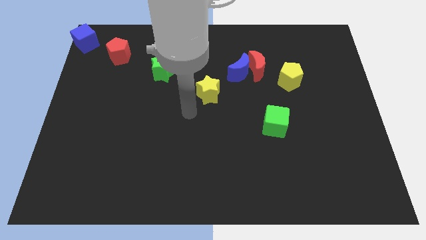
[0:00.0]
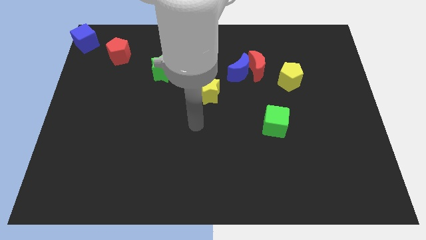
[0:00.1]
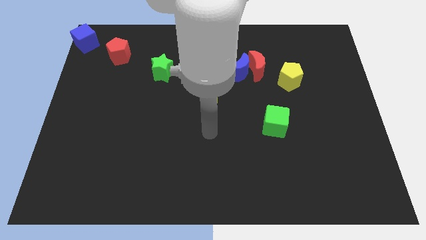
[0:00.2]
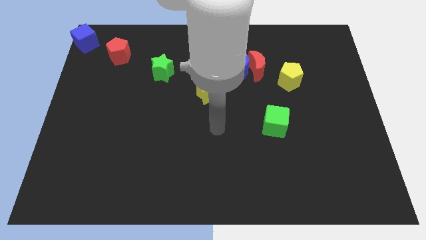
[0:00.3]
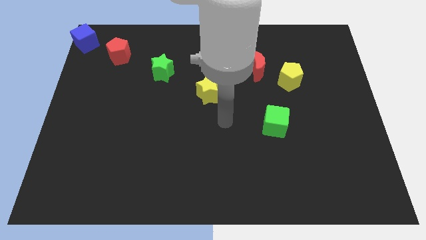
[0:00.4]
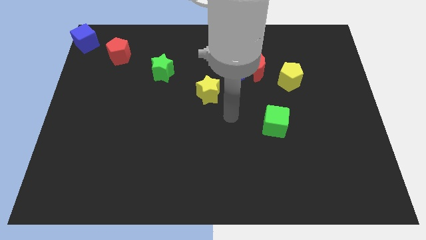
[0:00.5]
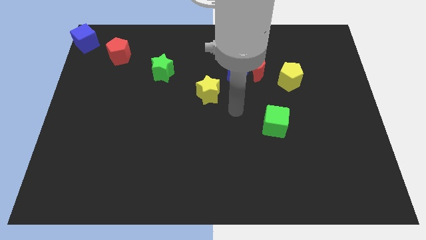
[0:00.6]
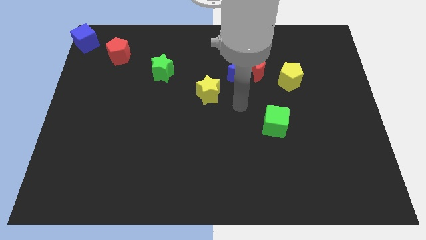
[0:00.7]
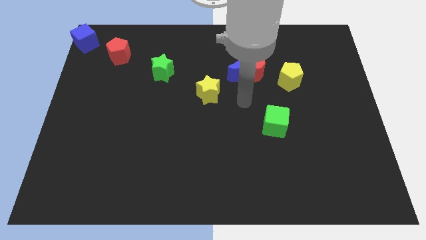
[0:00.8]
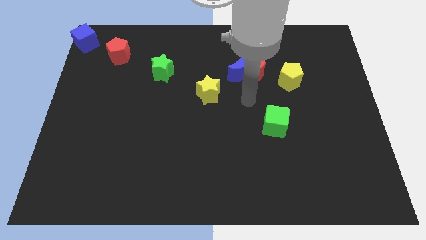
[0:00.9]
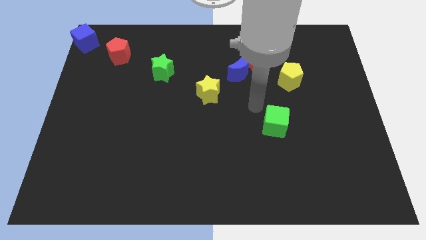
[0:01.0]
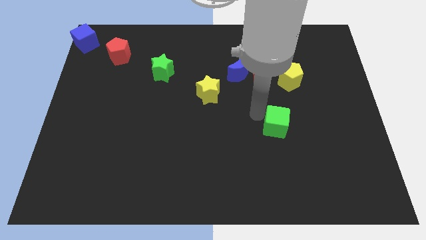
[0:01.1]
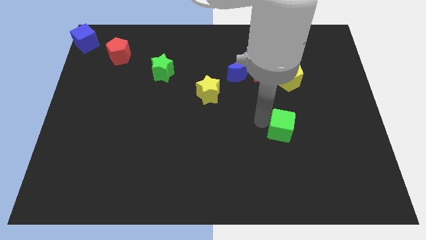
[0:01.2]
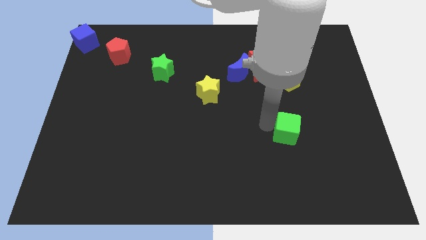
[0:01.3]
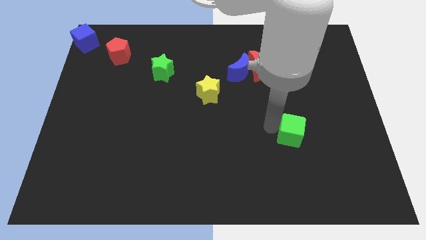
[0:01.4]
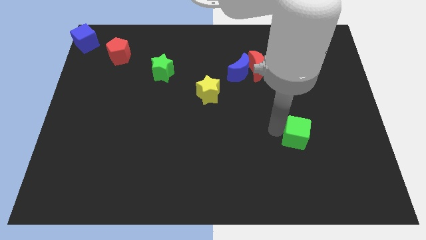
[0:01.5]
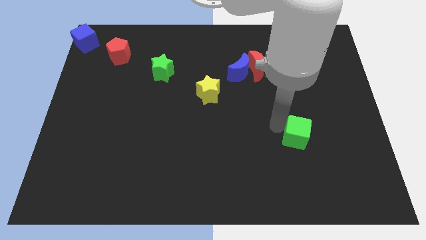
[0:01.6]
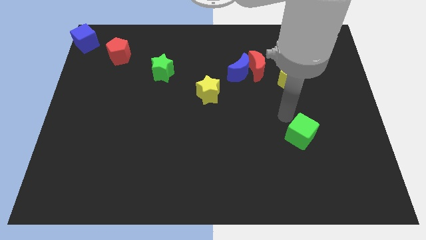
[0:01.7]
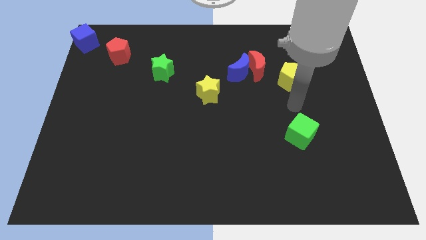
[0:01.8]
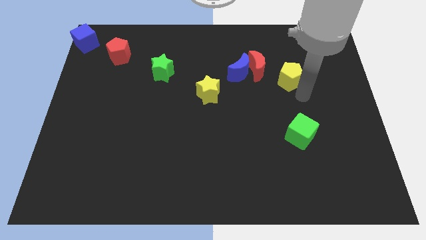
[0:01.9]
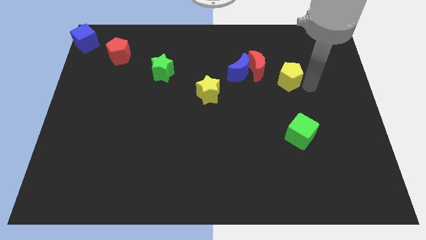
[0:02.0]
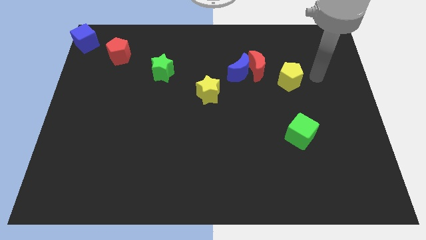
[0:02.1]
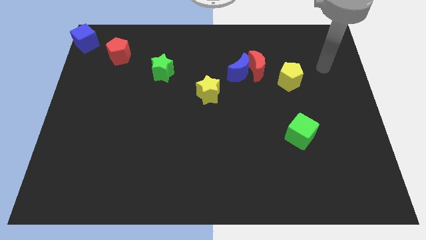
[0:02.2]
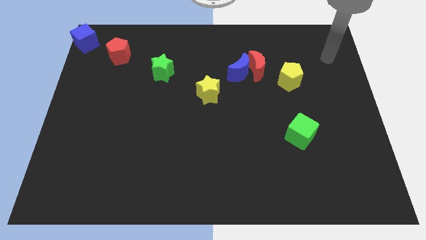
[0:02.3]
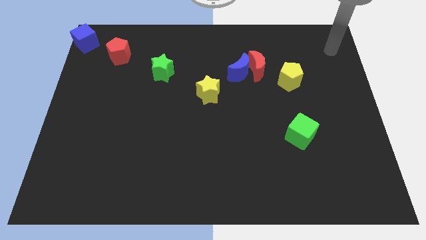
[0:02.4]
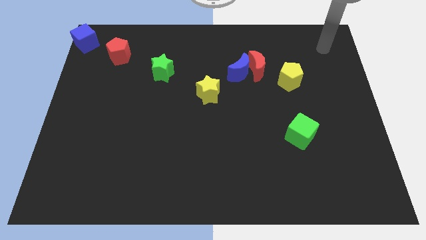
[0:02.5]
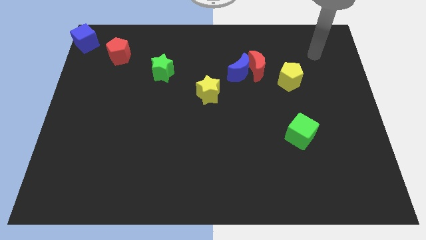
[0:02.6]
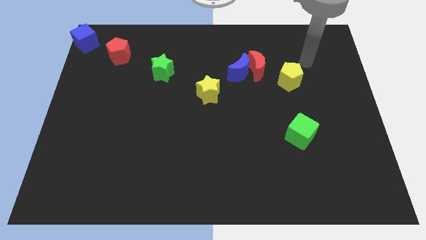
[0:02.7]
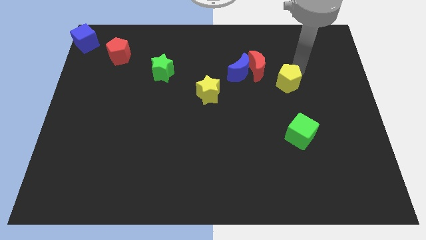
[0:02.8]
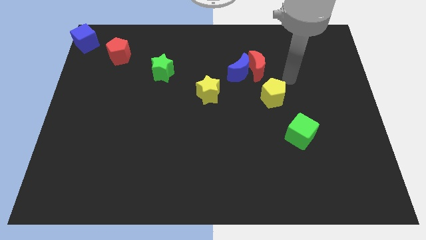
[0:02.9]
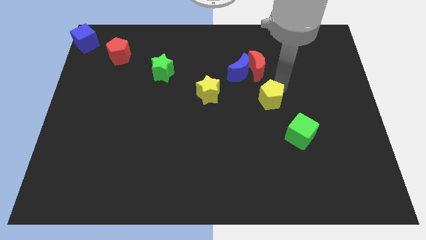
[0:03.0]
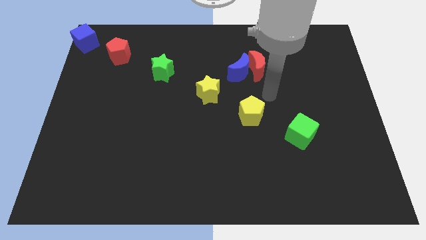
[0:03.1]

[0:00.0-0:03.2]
place green cube and yellow pentagon in the line with group of blocks

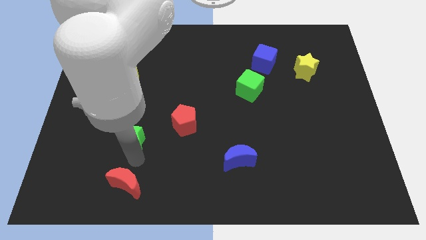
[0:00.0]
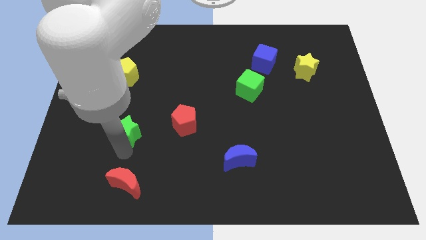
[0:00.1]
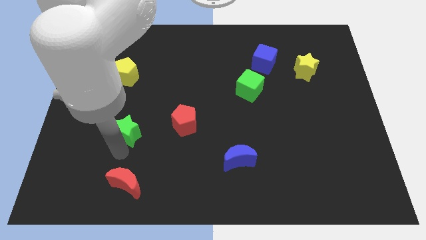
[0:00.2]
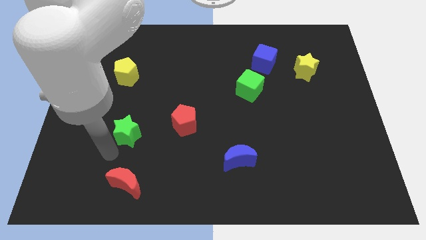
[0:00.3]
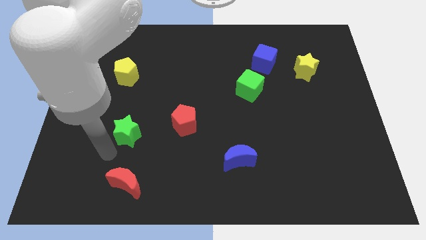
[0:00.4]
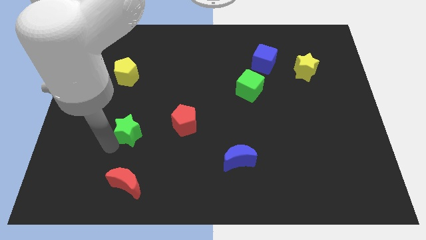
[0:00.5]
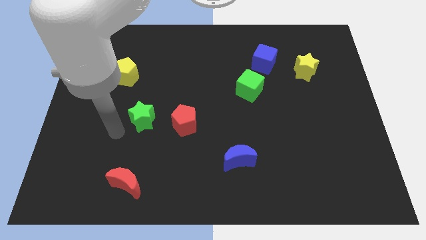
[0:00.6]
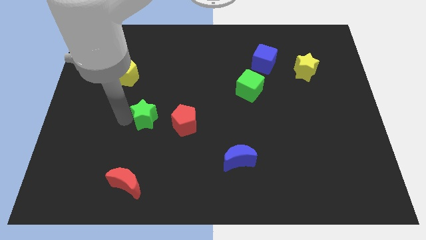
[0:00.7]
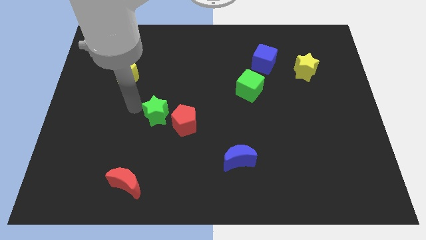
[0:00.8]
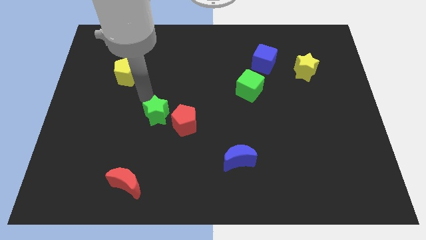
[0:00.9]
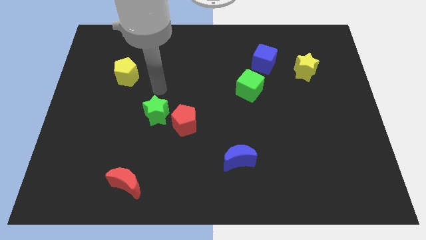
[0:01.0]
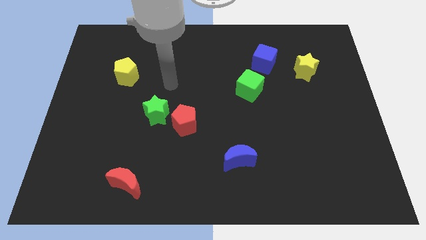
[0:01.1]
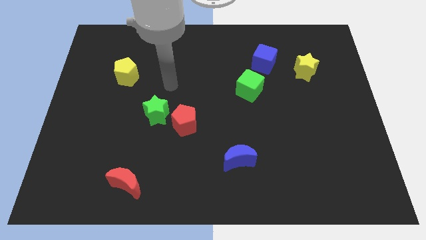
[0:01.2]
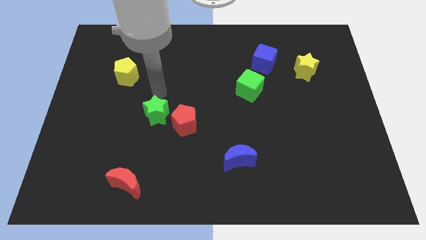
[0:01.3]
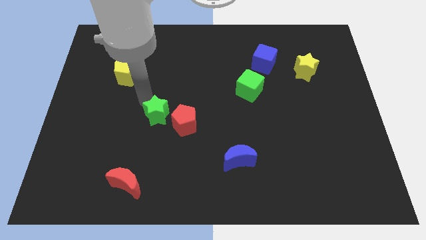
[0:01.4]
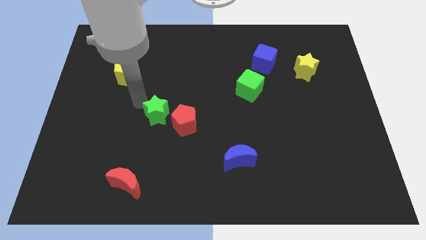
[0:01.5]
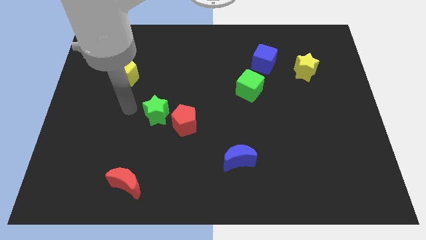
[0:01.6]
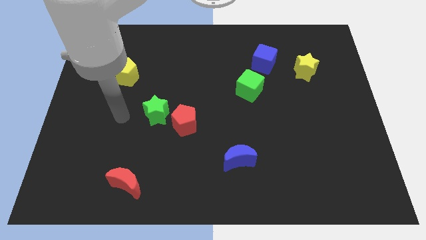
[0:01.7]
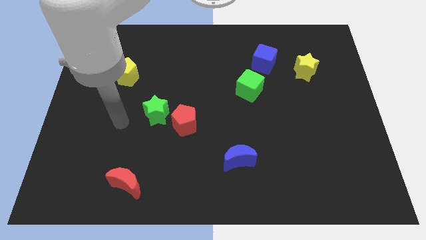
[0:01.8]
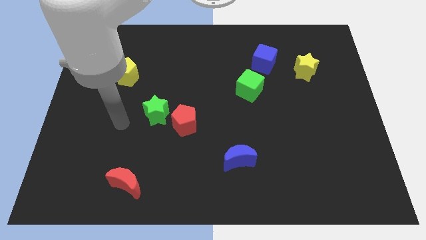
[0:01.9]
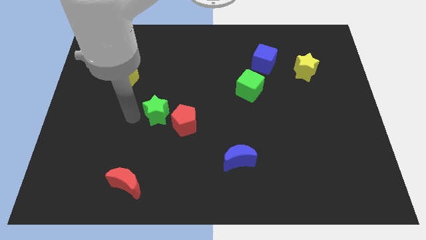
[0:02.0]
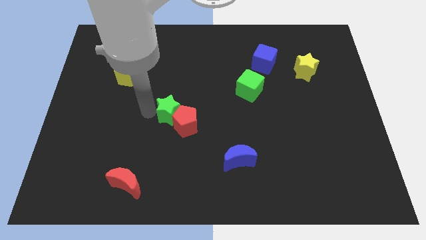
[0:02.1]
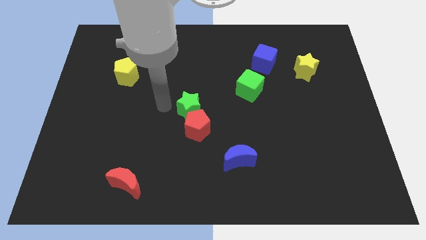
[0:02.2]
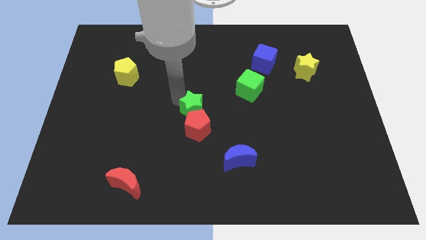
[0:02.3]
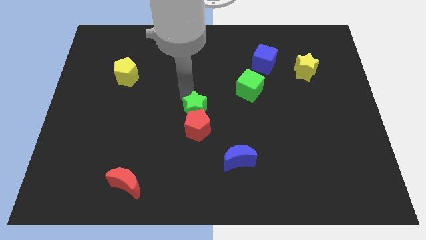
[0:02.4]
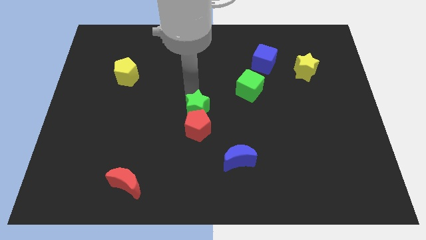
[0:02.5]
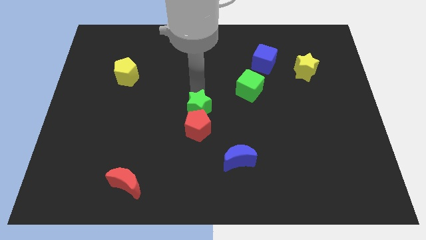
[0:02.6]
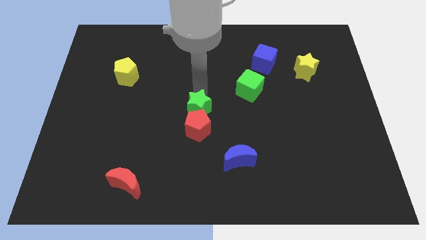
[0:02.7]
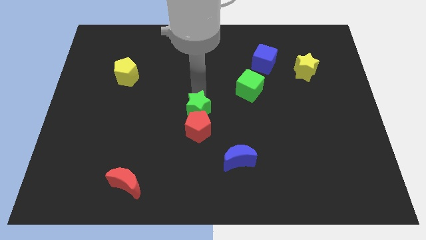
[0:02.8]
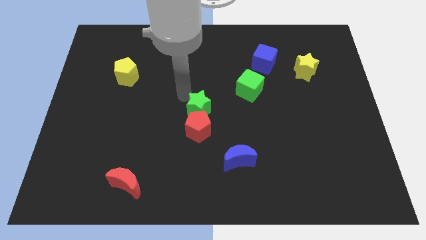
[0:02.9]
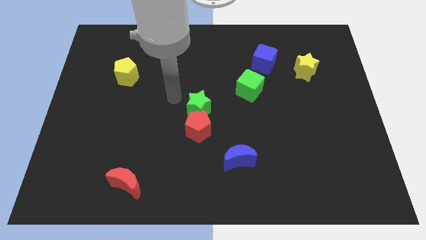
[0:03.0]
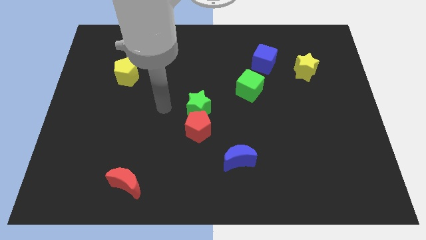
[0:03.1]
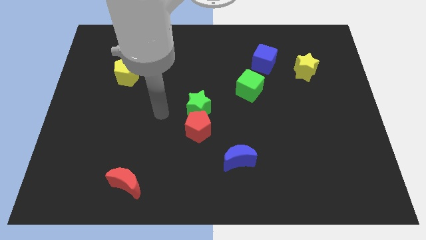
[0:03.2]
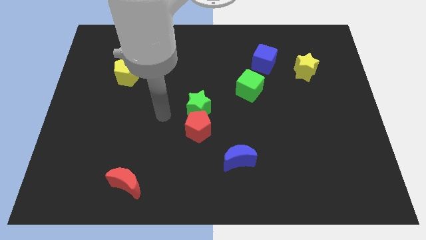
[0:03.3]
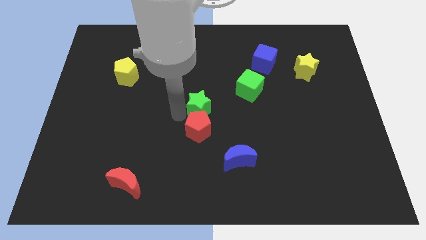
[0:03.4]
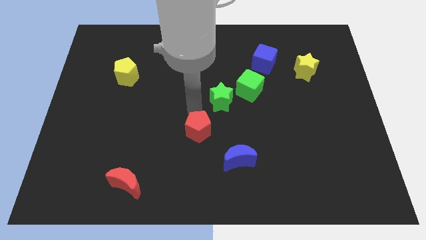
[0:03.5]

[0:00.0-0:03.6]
place the green star at the top right of the red pentagon

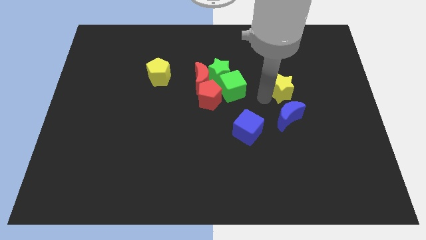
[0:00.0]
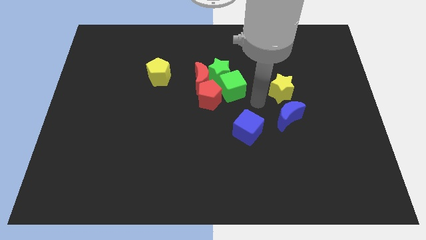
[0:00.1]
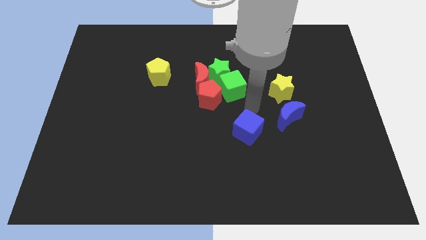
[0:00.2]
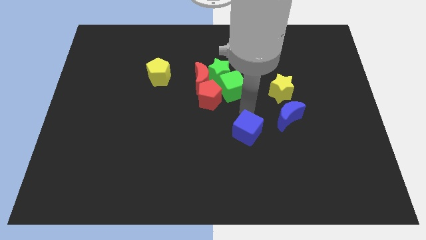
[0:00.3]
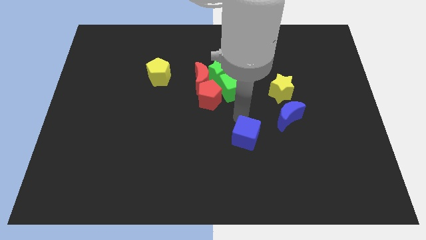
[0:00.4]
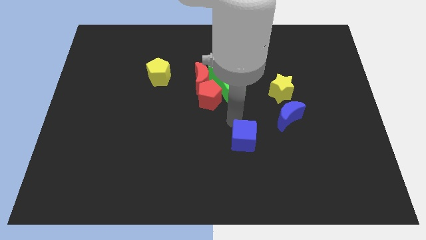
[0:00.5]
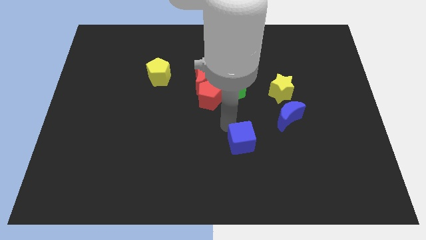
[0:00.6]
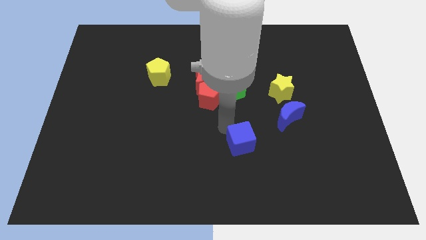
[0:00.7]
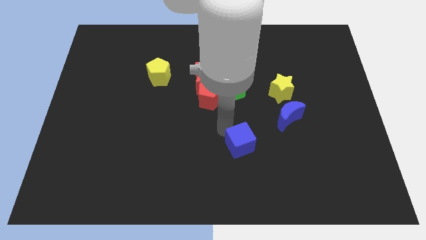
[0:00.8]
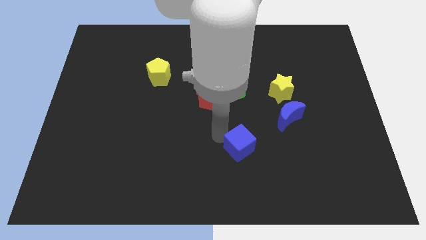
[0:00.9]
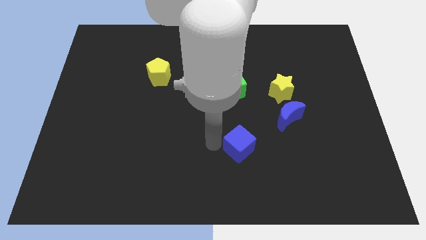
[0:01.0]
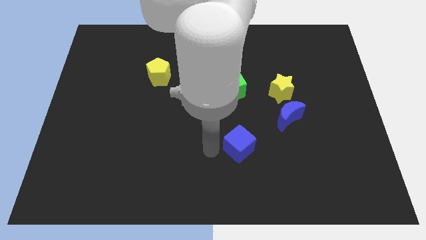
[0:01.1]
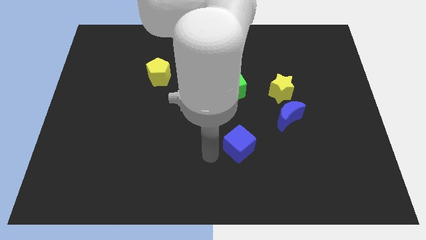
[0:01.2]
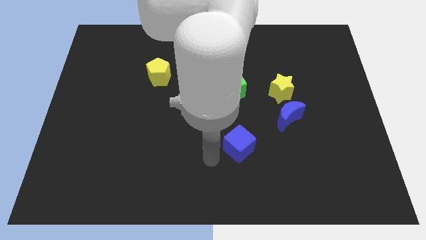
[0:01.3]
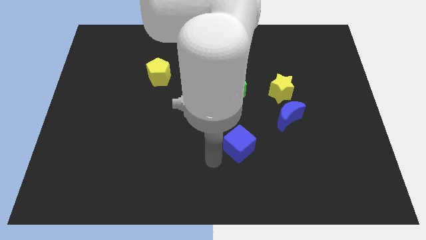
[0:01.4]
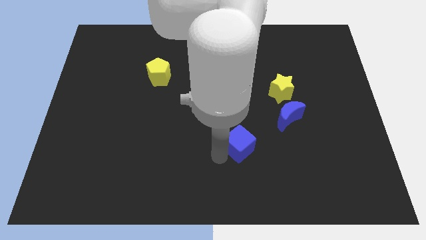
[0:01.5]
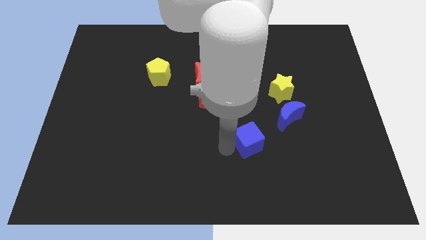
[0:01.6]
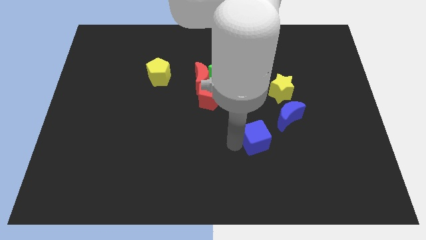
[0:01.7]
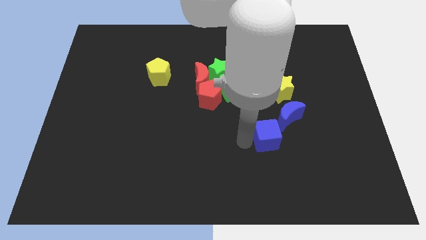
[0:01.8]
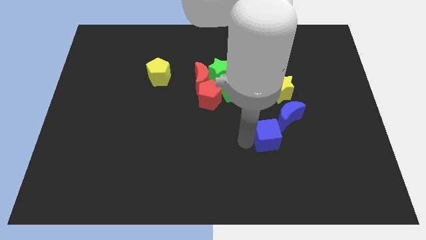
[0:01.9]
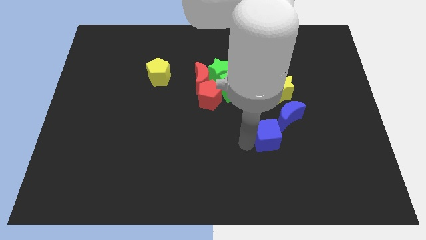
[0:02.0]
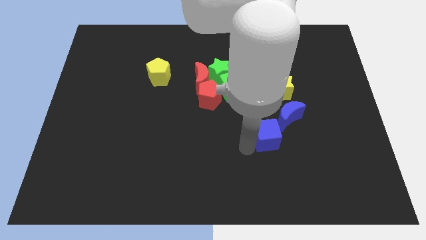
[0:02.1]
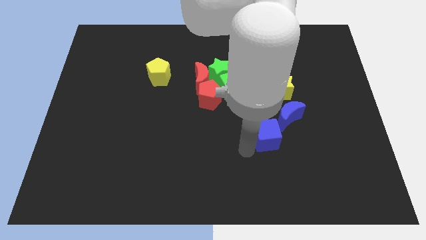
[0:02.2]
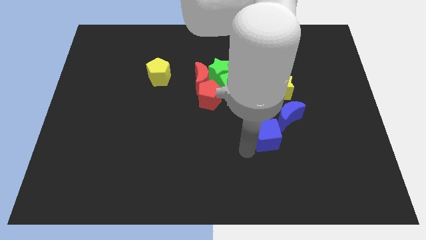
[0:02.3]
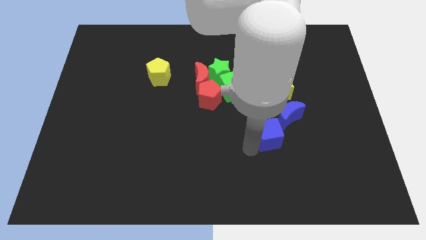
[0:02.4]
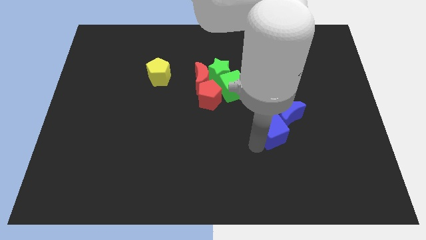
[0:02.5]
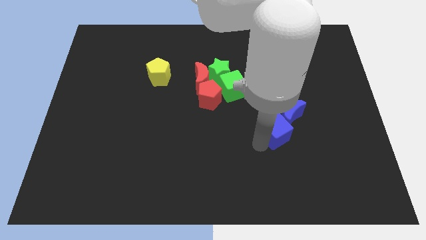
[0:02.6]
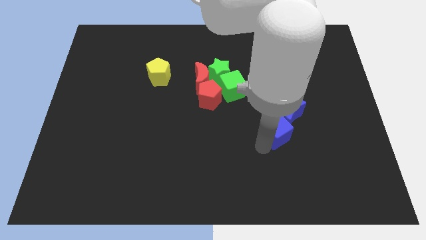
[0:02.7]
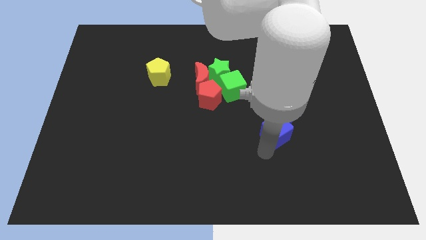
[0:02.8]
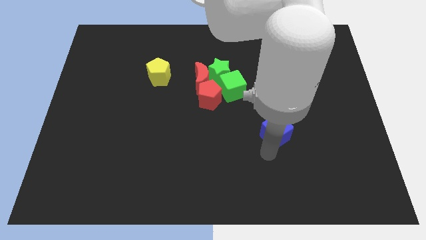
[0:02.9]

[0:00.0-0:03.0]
push the blue cube to the bottom of the blue crescent
